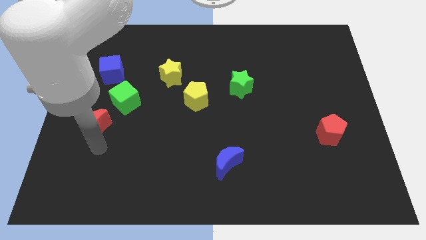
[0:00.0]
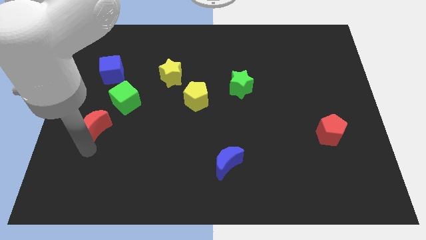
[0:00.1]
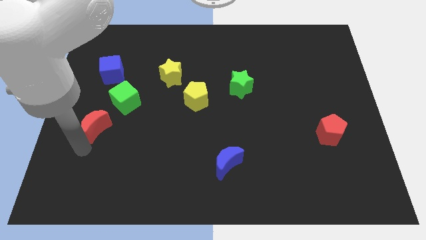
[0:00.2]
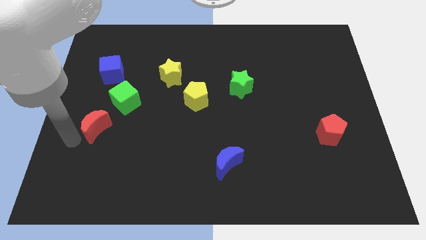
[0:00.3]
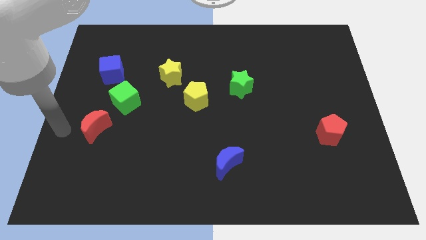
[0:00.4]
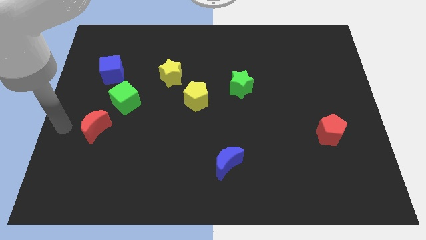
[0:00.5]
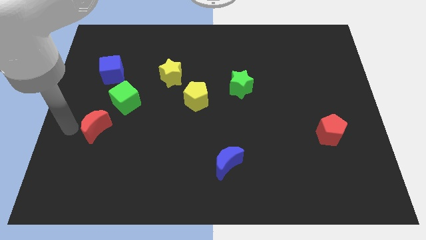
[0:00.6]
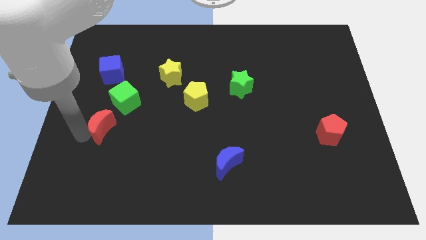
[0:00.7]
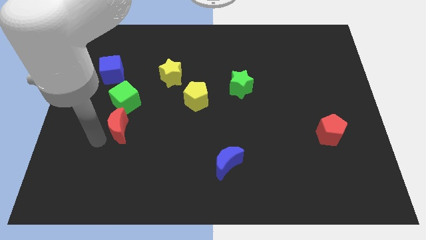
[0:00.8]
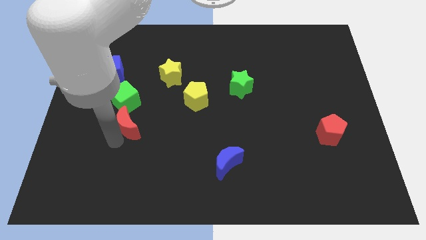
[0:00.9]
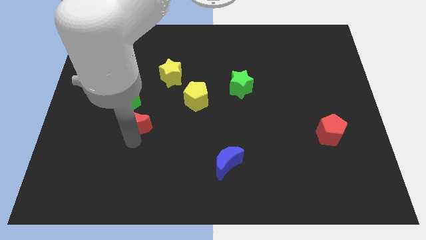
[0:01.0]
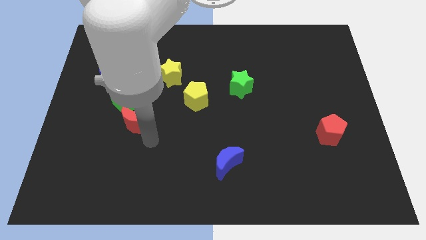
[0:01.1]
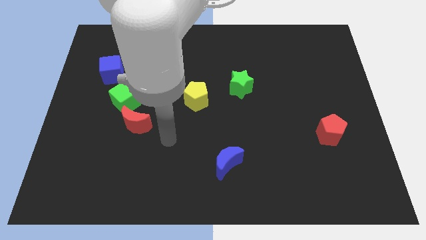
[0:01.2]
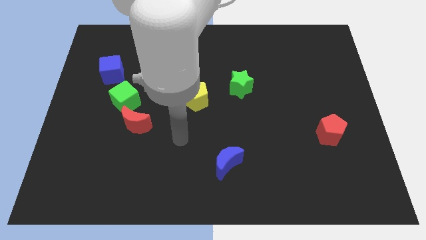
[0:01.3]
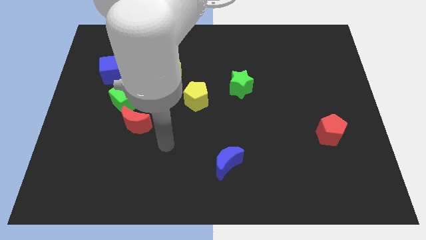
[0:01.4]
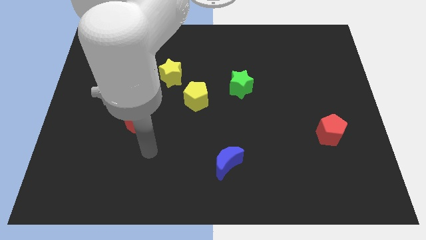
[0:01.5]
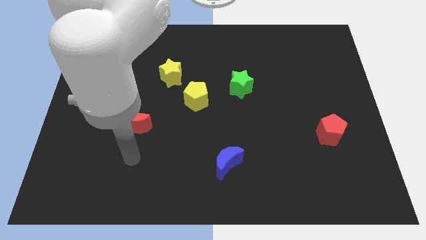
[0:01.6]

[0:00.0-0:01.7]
move the red crescent slightly towards the green cube

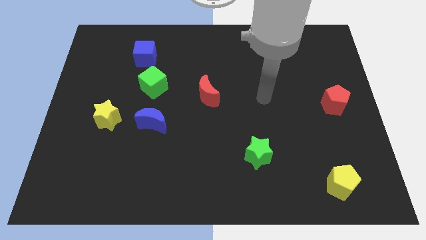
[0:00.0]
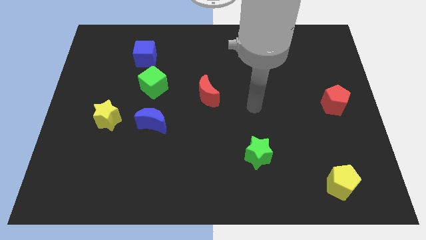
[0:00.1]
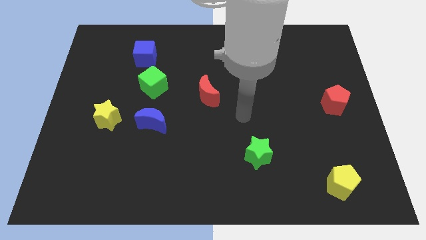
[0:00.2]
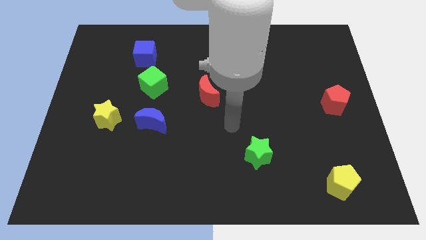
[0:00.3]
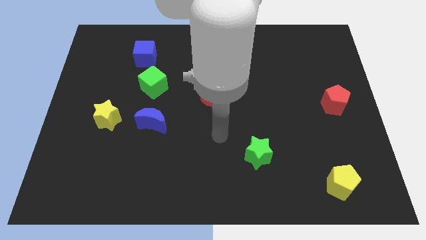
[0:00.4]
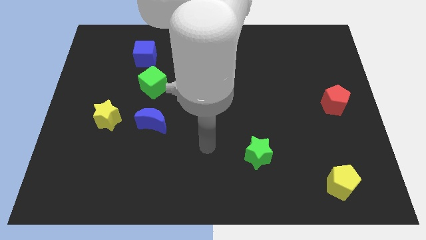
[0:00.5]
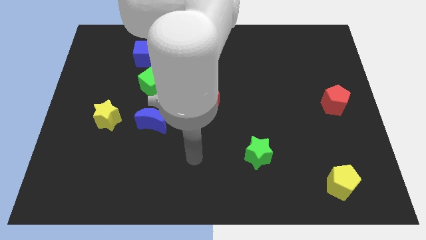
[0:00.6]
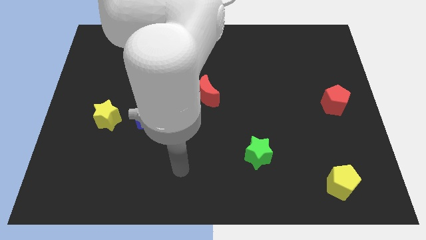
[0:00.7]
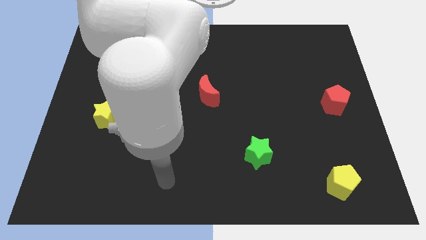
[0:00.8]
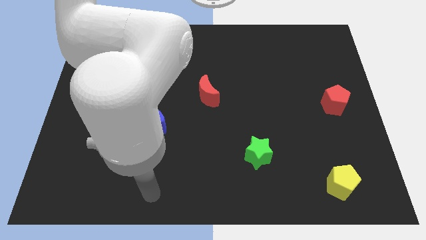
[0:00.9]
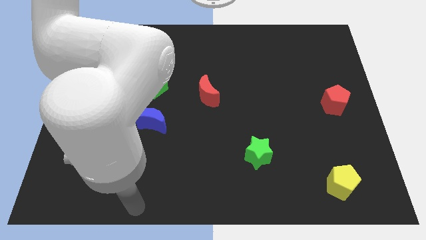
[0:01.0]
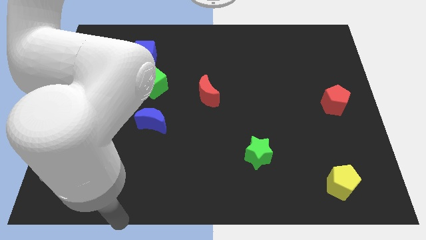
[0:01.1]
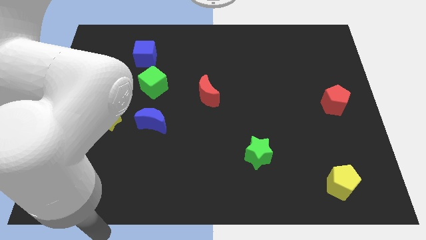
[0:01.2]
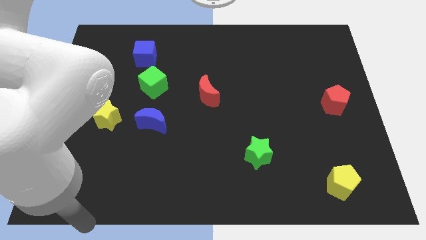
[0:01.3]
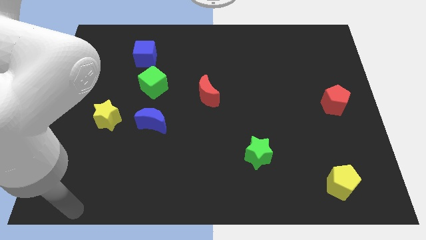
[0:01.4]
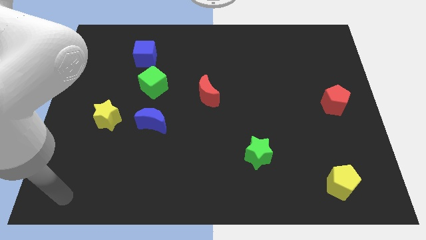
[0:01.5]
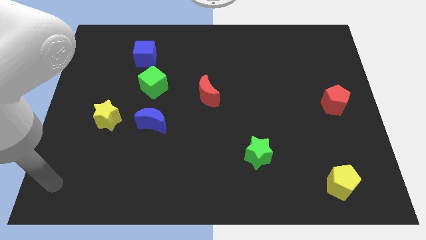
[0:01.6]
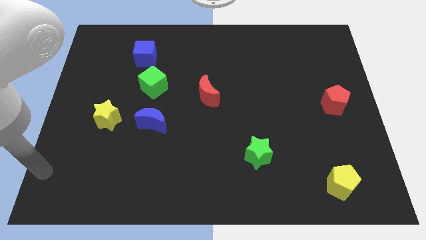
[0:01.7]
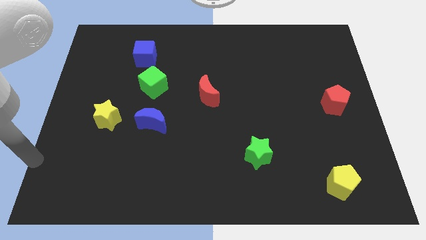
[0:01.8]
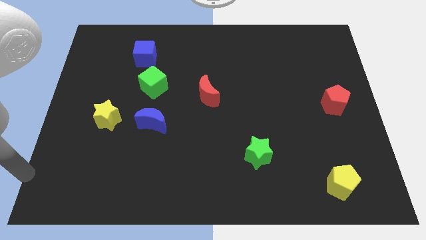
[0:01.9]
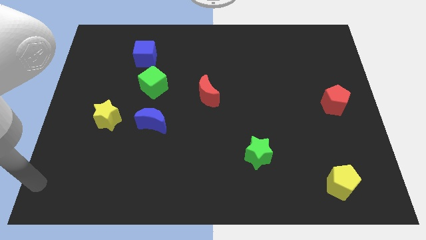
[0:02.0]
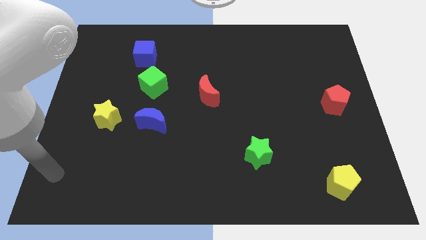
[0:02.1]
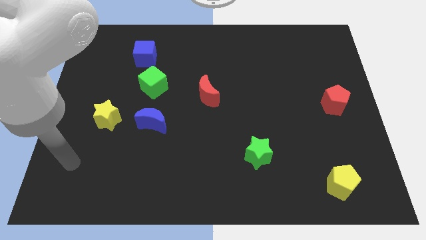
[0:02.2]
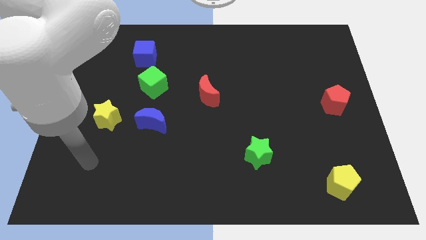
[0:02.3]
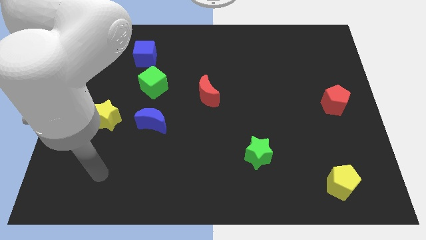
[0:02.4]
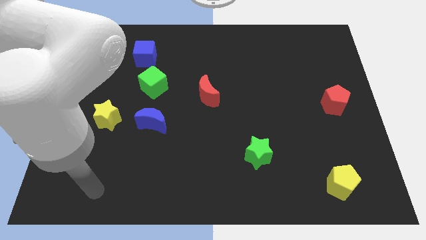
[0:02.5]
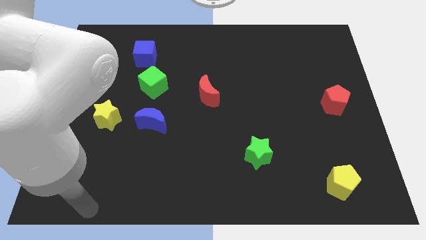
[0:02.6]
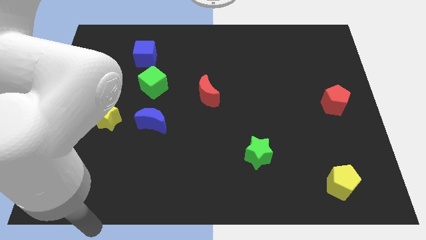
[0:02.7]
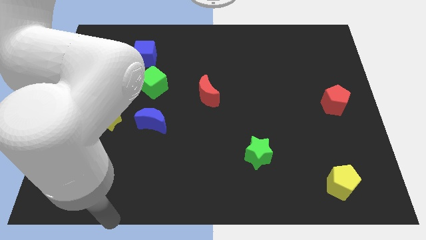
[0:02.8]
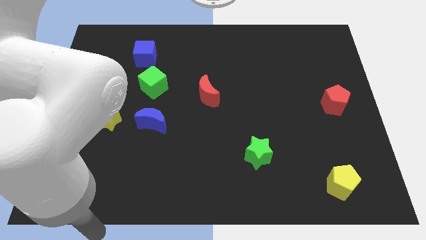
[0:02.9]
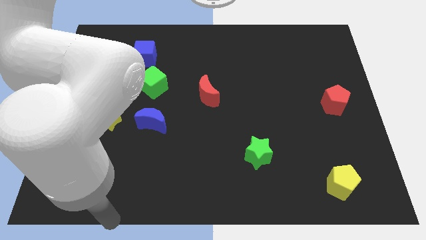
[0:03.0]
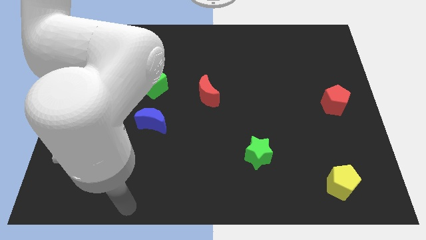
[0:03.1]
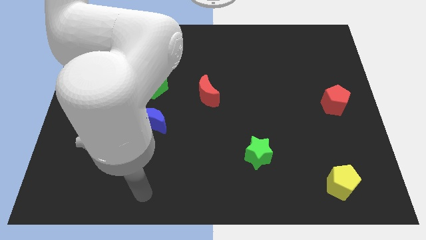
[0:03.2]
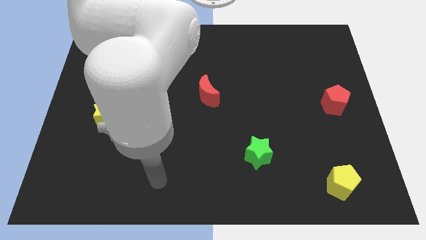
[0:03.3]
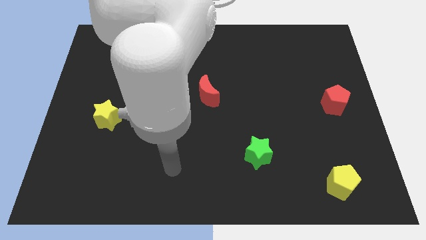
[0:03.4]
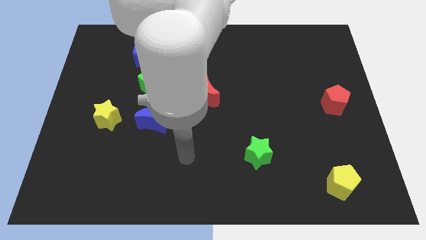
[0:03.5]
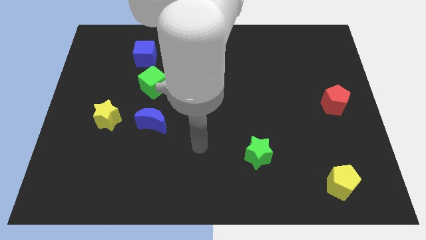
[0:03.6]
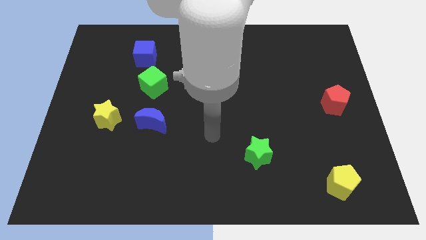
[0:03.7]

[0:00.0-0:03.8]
place your hand in between the blue moon and green star

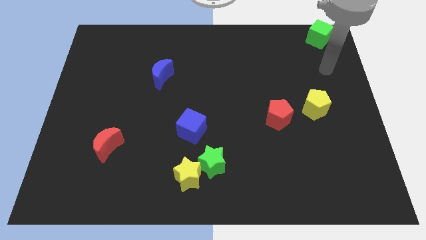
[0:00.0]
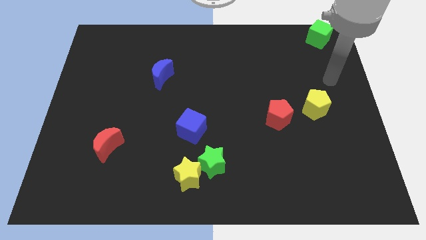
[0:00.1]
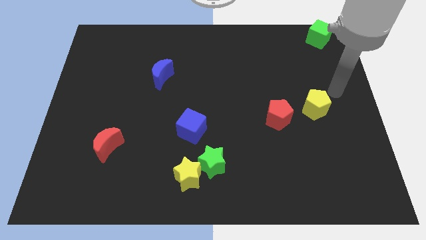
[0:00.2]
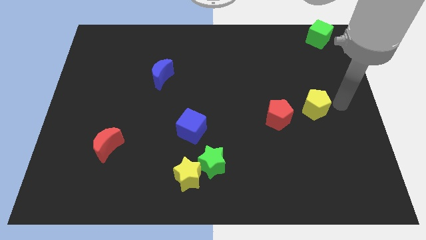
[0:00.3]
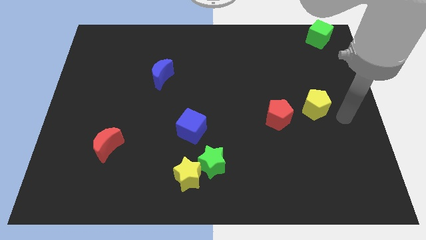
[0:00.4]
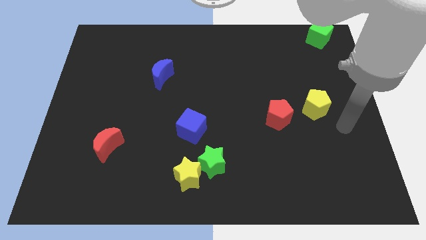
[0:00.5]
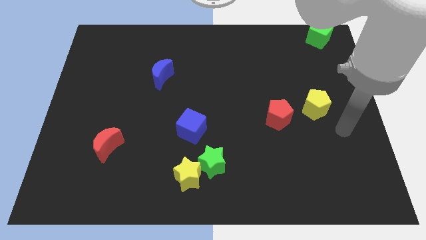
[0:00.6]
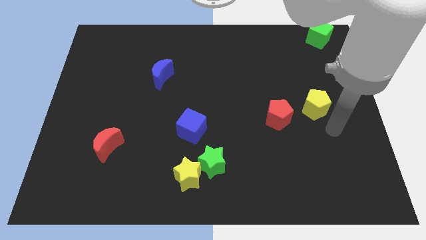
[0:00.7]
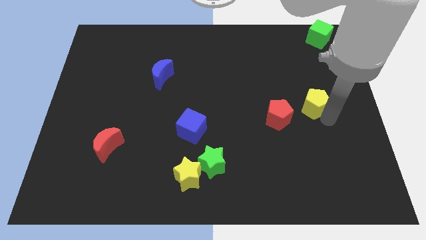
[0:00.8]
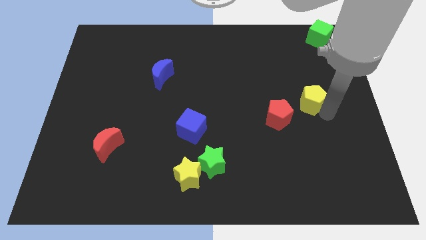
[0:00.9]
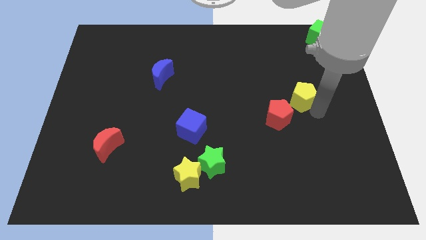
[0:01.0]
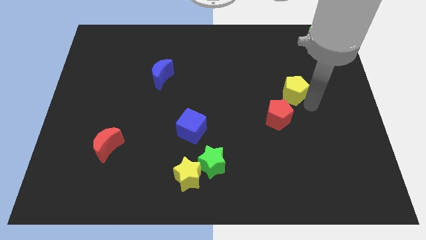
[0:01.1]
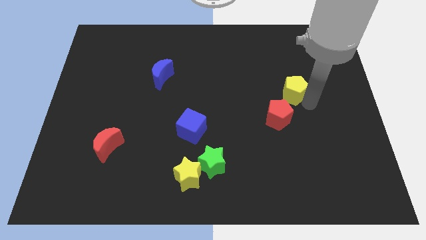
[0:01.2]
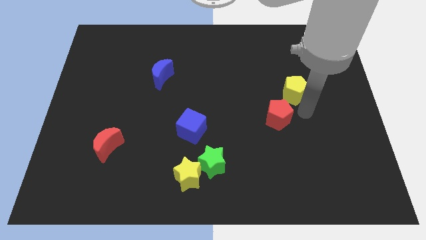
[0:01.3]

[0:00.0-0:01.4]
slightly push the yellow pentagon towards the top of the board

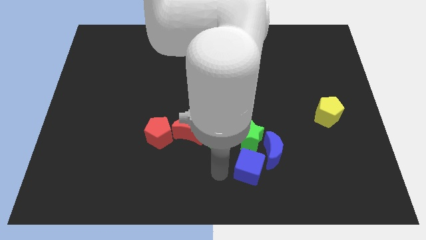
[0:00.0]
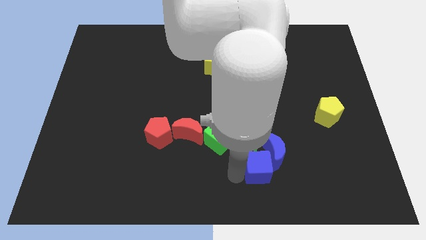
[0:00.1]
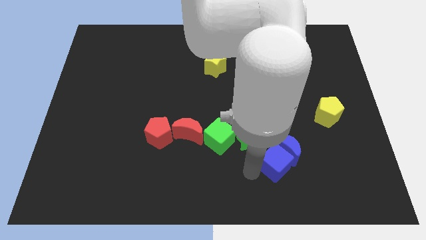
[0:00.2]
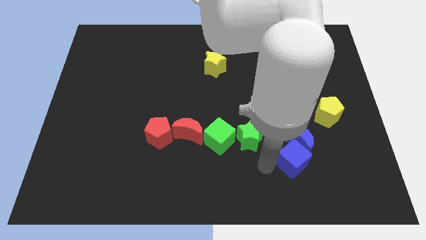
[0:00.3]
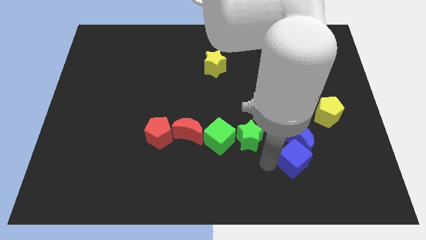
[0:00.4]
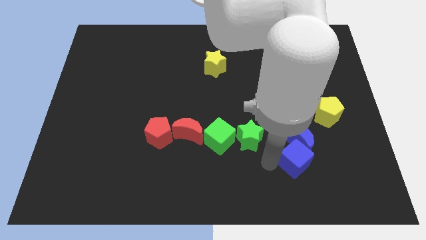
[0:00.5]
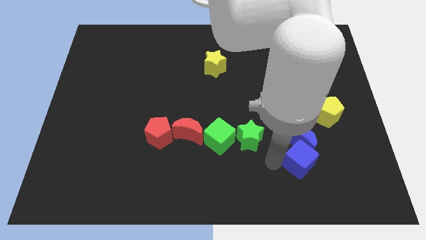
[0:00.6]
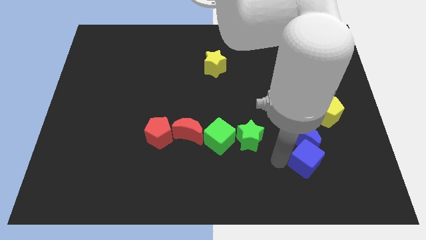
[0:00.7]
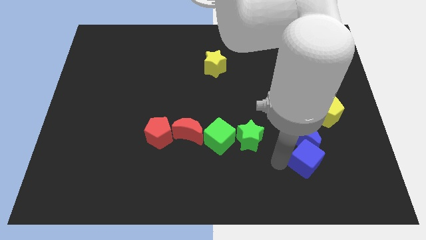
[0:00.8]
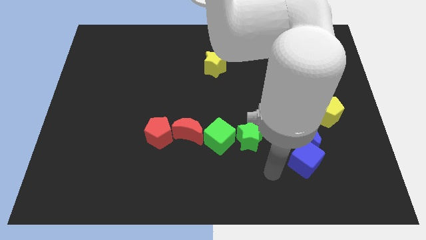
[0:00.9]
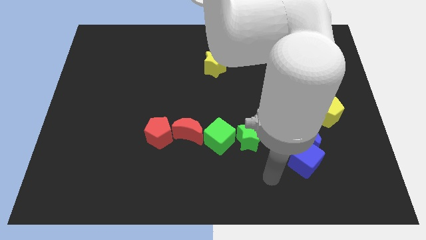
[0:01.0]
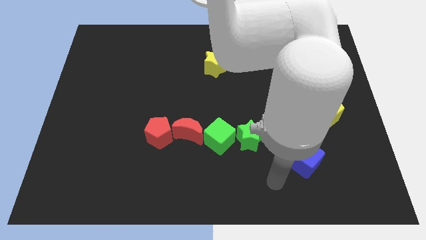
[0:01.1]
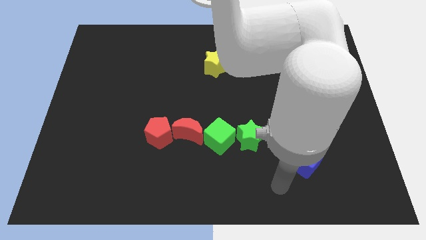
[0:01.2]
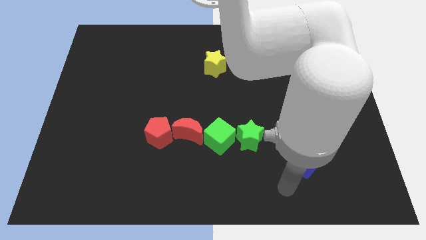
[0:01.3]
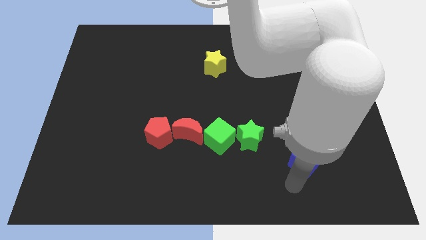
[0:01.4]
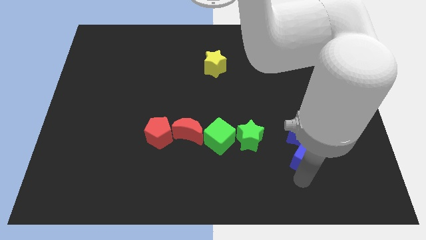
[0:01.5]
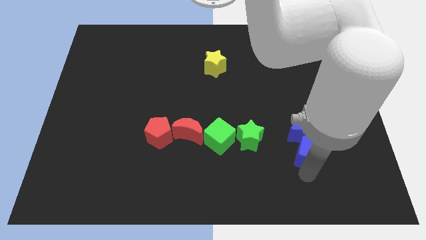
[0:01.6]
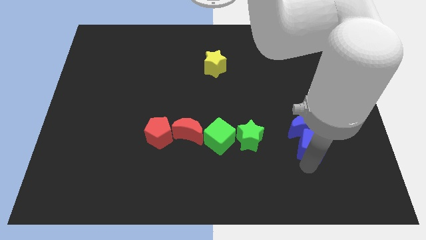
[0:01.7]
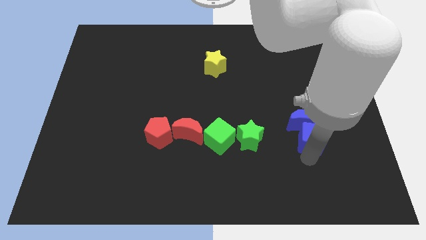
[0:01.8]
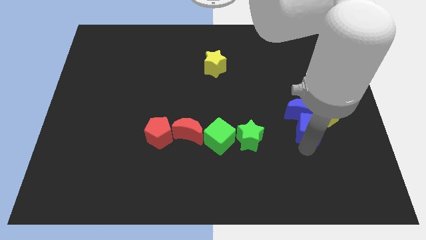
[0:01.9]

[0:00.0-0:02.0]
push the blue cube into the blue crescent

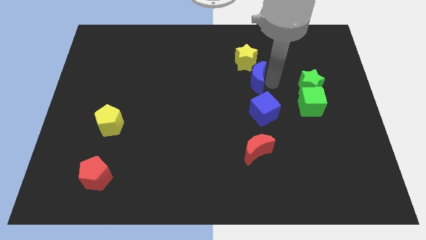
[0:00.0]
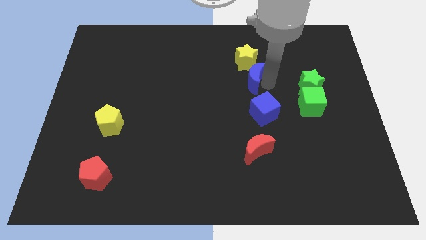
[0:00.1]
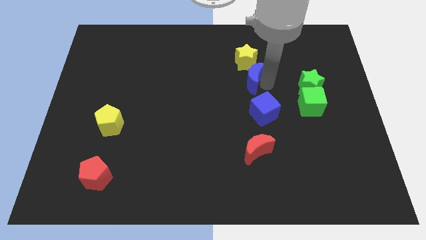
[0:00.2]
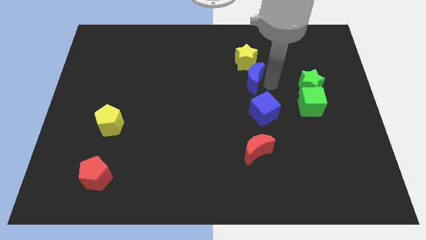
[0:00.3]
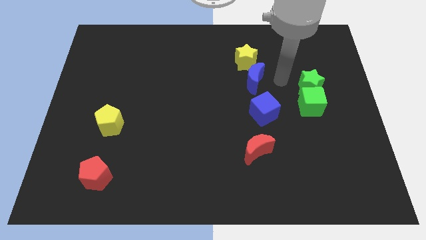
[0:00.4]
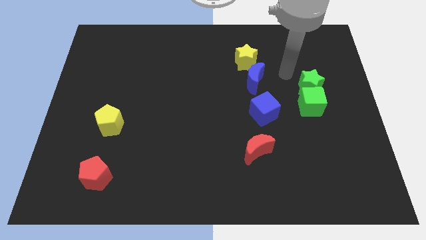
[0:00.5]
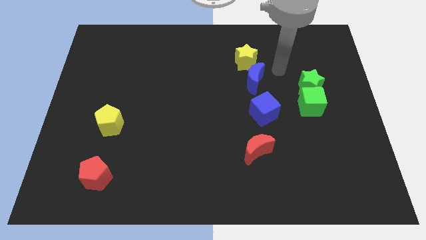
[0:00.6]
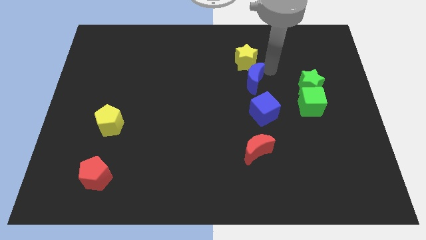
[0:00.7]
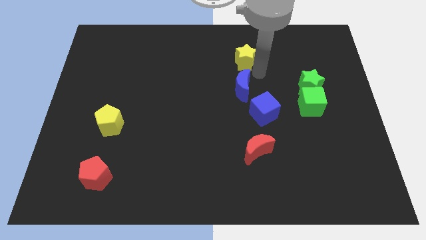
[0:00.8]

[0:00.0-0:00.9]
push the blue crescent at the bottom of the yellow star
